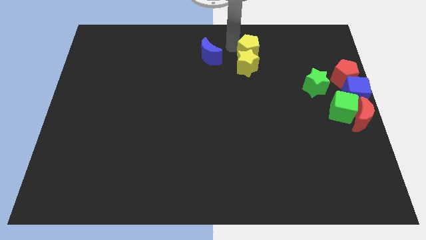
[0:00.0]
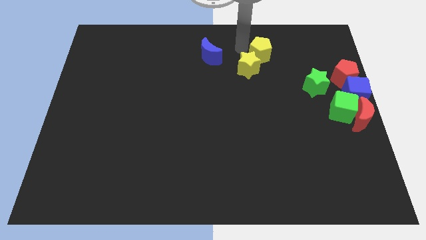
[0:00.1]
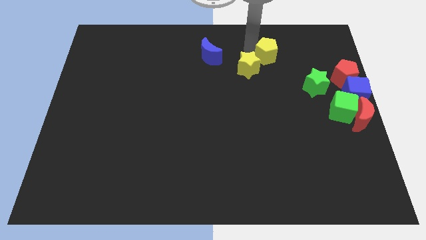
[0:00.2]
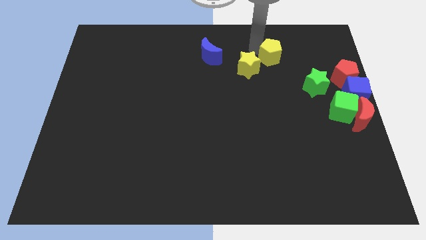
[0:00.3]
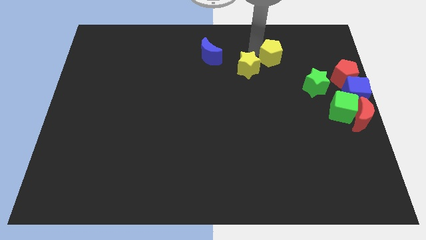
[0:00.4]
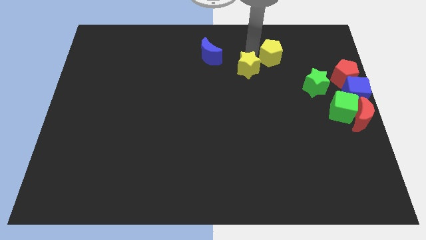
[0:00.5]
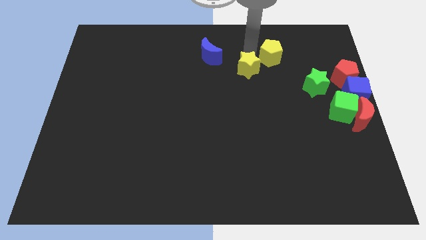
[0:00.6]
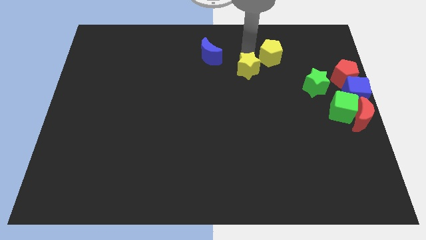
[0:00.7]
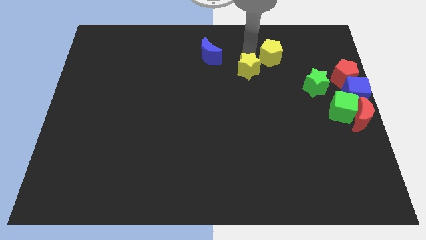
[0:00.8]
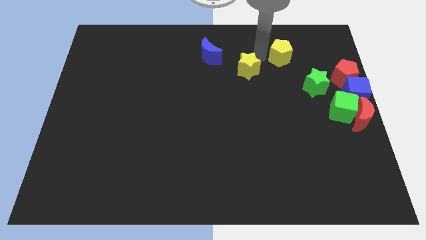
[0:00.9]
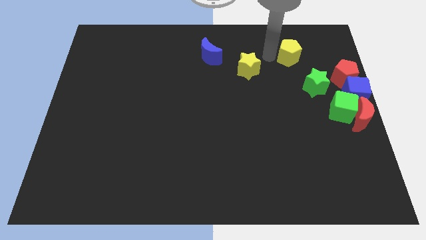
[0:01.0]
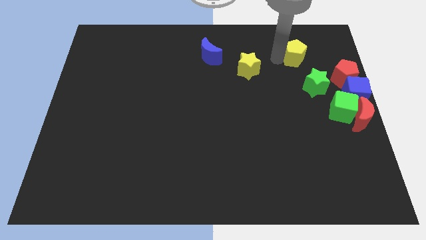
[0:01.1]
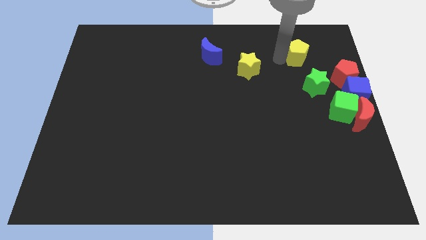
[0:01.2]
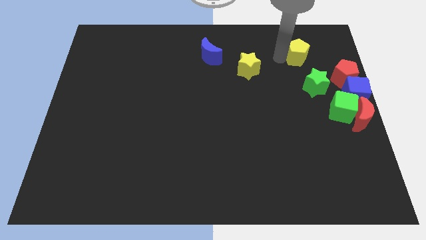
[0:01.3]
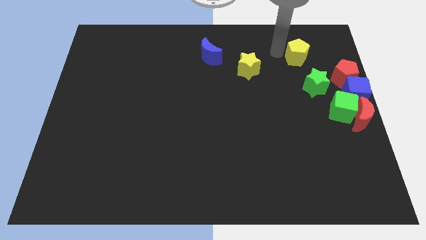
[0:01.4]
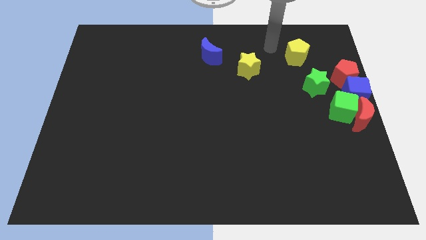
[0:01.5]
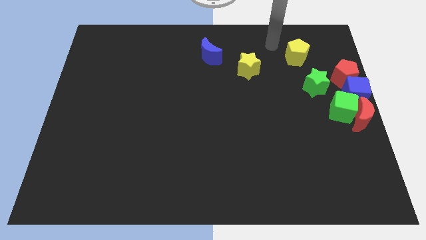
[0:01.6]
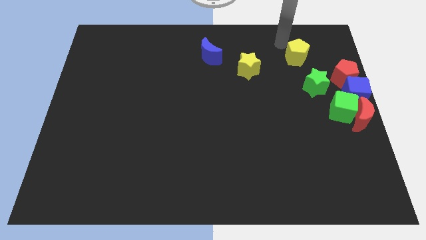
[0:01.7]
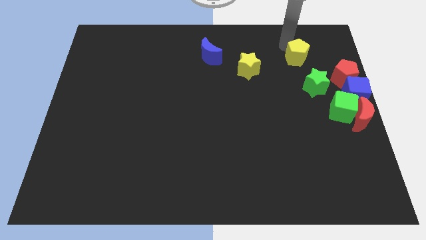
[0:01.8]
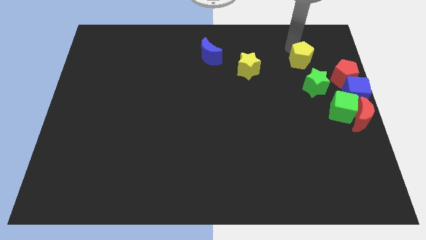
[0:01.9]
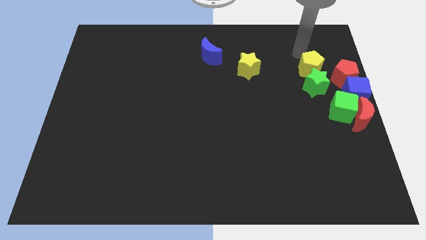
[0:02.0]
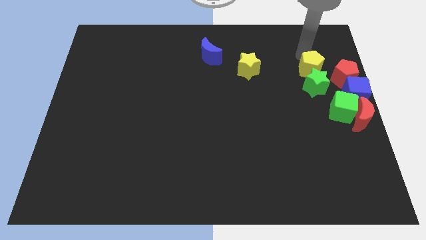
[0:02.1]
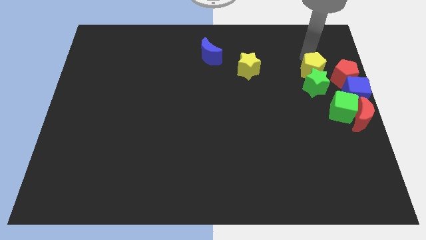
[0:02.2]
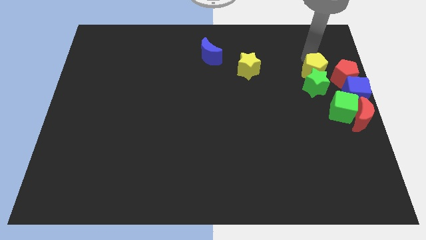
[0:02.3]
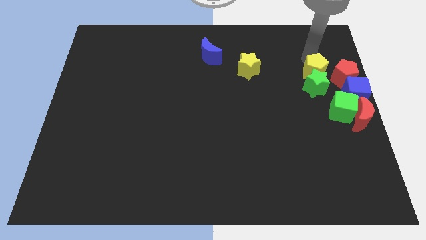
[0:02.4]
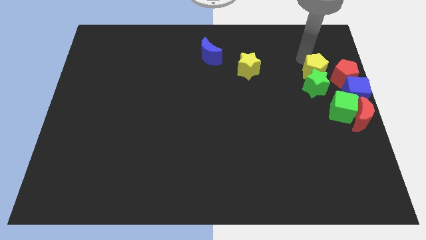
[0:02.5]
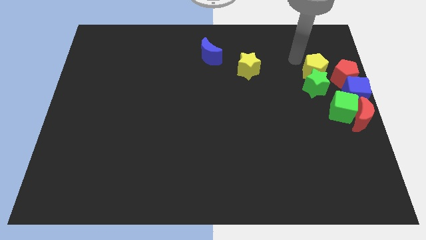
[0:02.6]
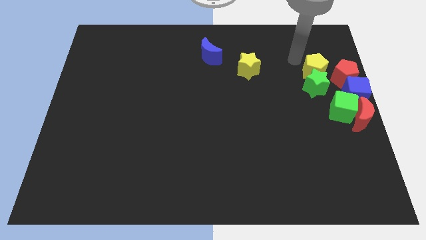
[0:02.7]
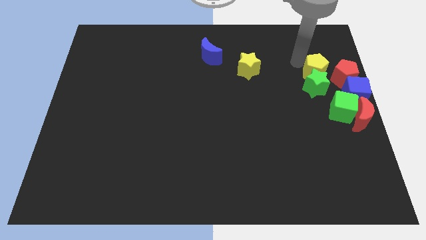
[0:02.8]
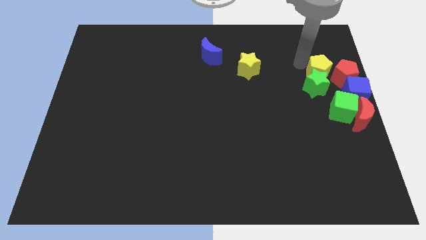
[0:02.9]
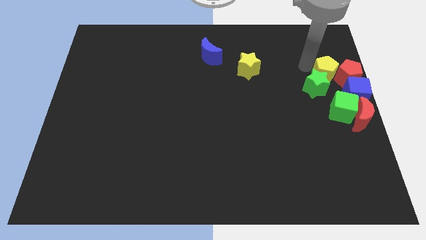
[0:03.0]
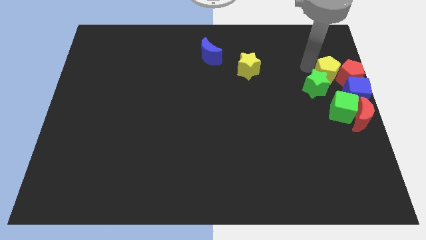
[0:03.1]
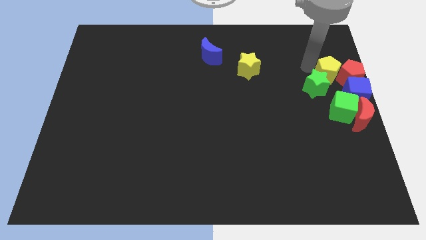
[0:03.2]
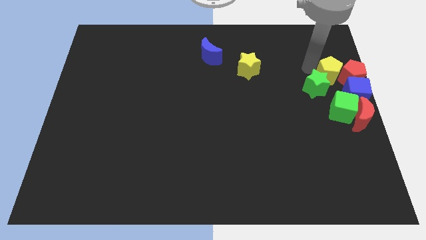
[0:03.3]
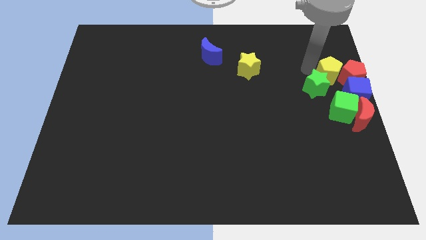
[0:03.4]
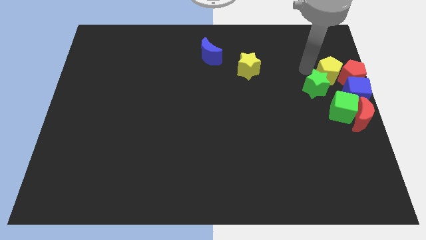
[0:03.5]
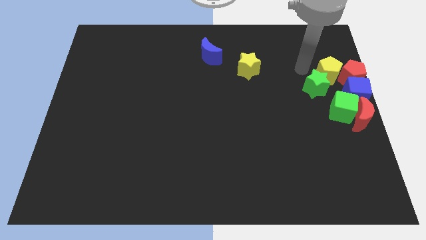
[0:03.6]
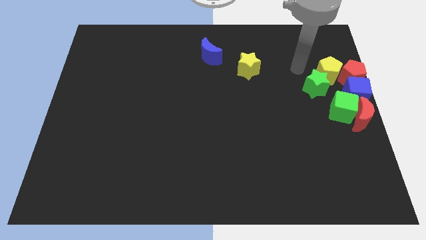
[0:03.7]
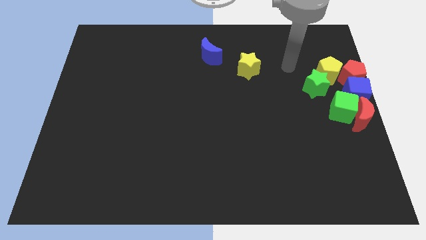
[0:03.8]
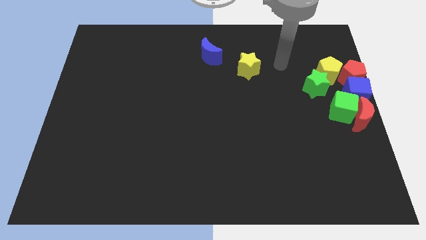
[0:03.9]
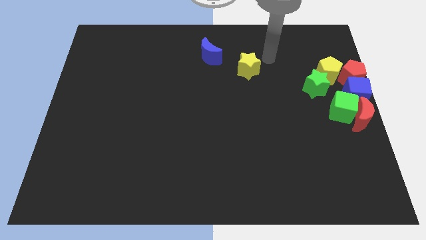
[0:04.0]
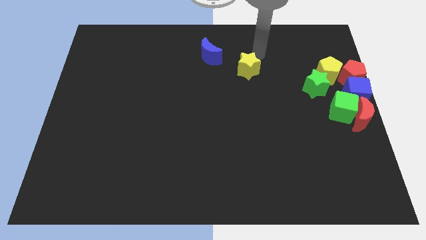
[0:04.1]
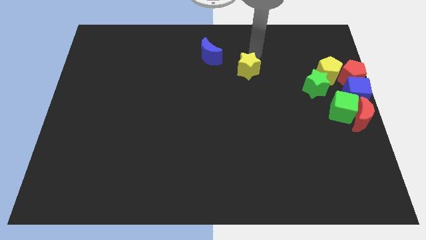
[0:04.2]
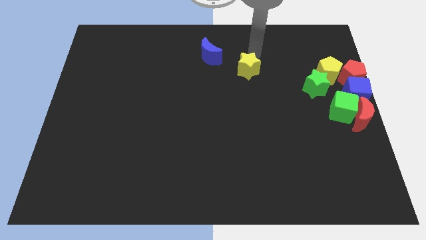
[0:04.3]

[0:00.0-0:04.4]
move the yellow pentagon to the left of red pentagon

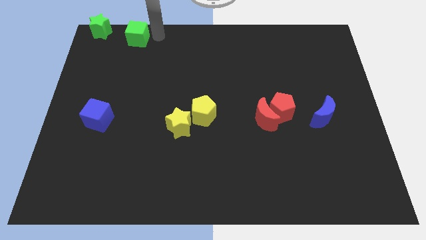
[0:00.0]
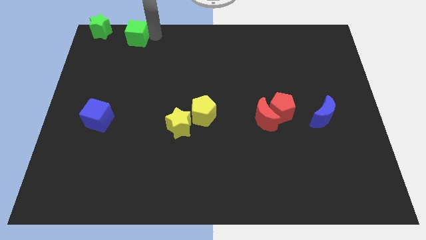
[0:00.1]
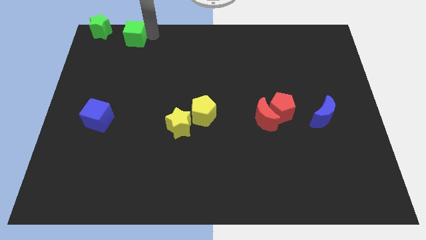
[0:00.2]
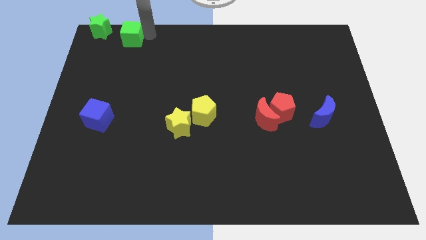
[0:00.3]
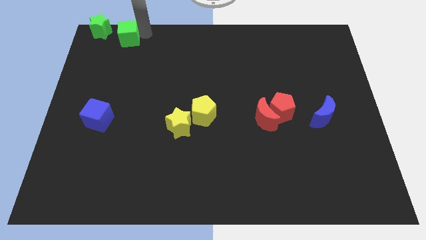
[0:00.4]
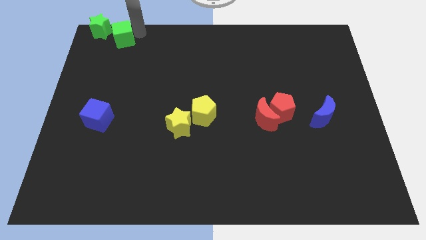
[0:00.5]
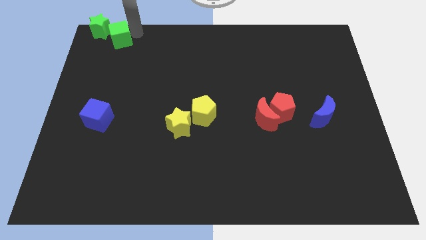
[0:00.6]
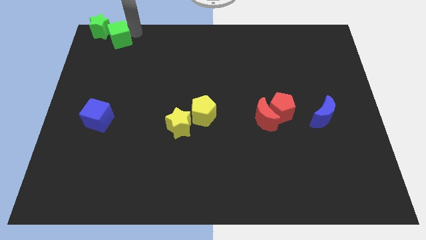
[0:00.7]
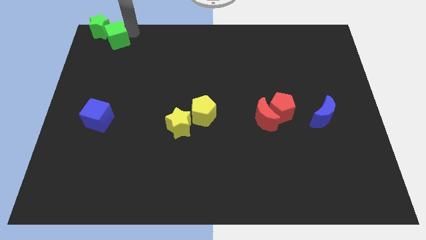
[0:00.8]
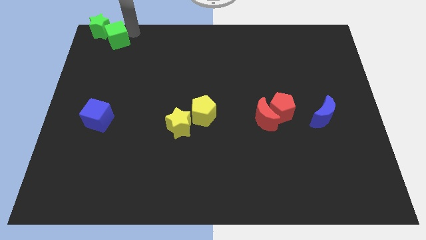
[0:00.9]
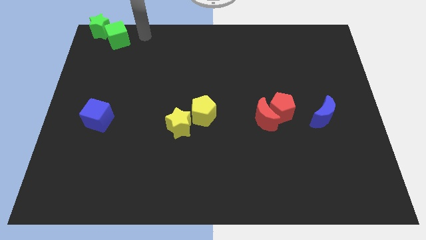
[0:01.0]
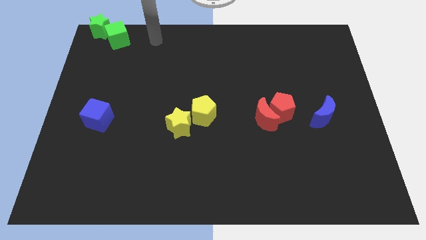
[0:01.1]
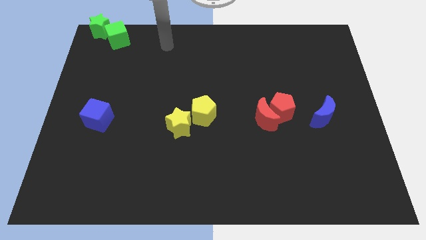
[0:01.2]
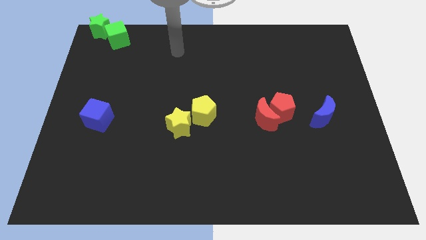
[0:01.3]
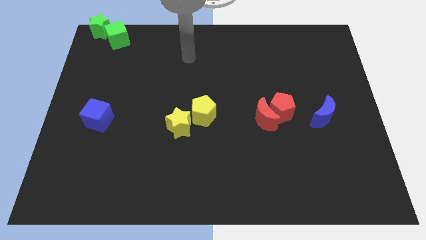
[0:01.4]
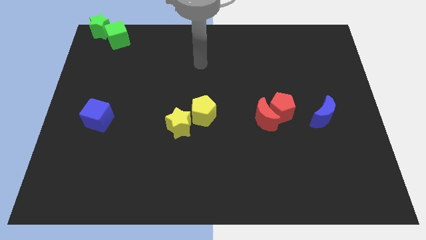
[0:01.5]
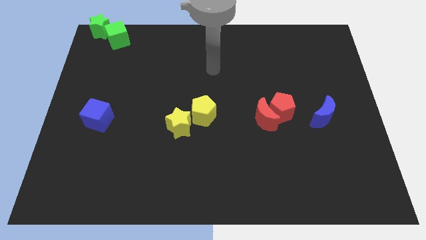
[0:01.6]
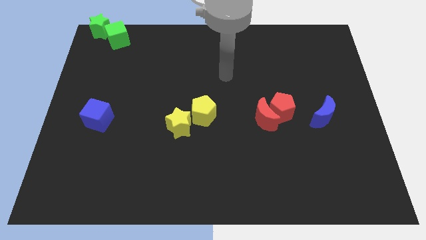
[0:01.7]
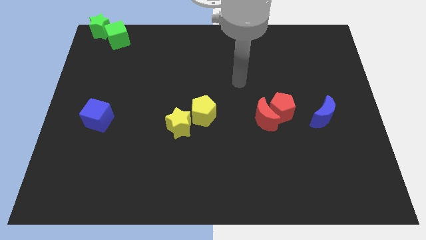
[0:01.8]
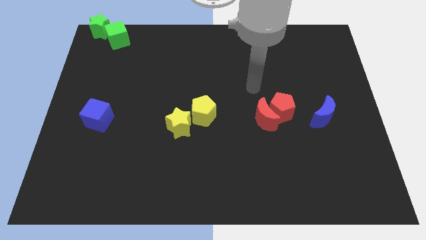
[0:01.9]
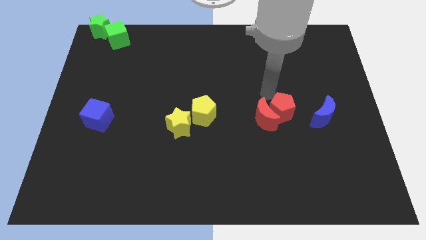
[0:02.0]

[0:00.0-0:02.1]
place the green cube diagonally to the green star

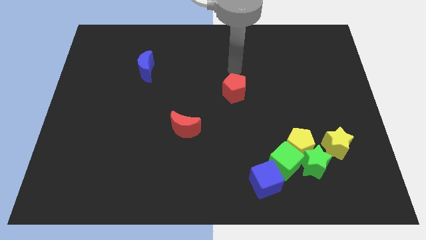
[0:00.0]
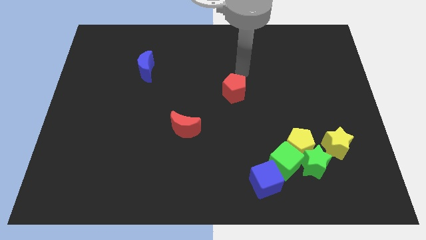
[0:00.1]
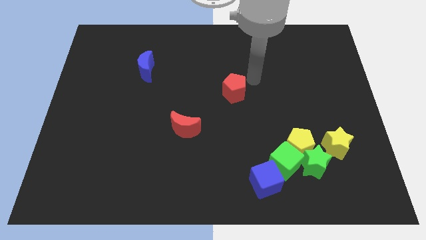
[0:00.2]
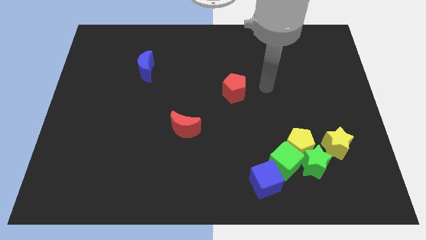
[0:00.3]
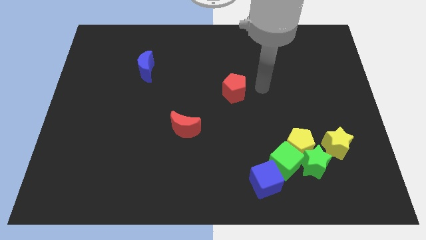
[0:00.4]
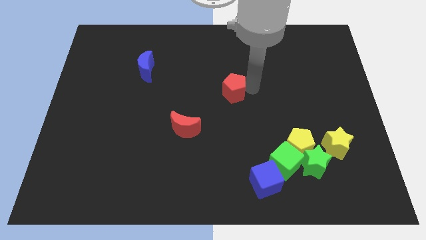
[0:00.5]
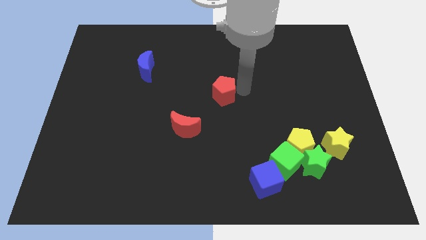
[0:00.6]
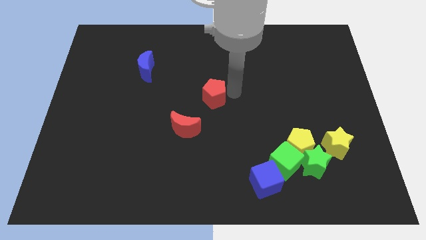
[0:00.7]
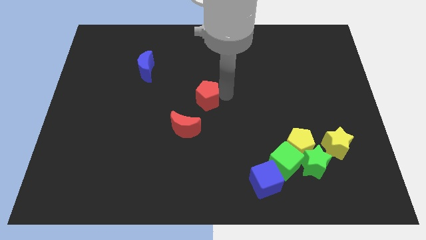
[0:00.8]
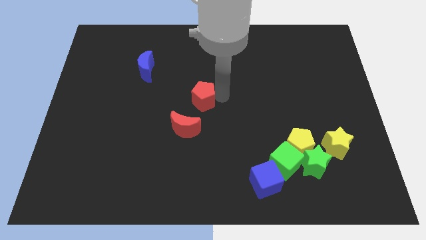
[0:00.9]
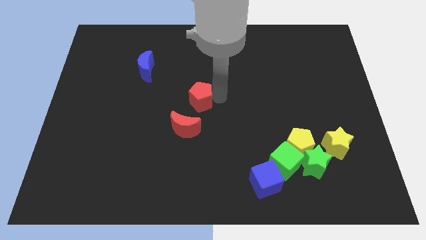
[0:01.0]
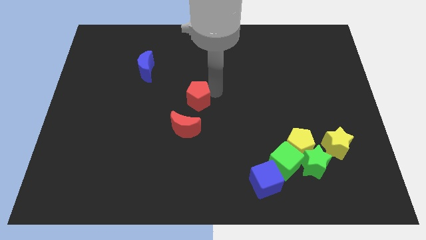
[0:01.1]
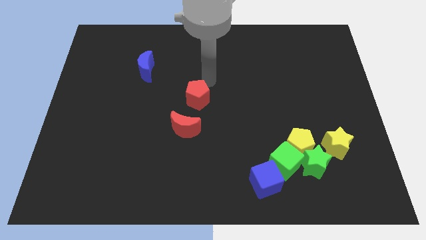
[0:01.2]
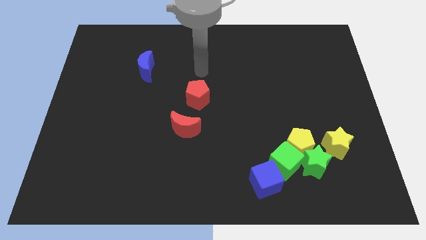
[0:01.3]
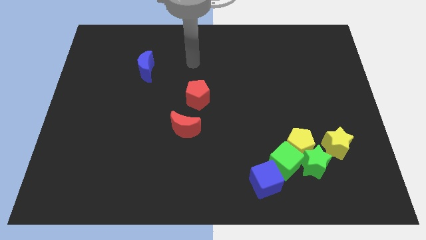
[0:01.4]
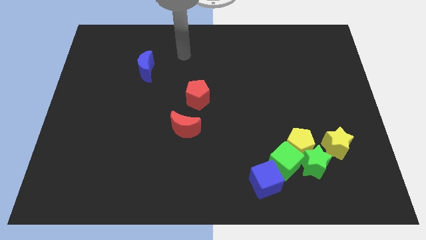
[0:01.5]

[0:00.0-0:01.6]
push the red pentagon at the top side of the red moon

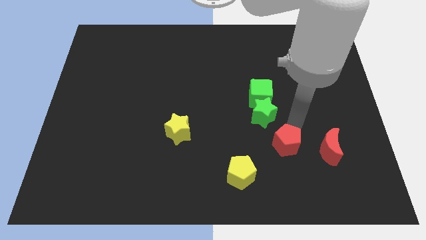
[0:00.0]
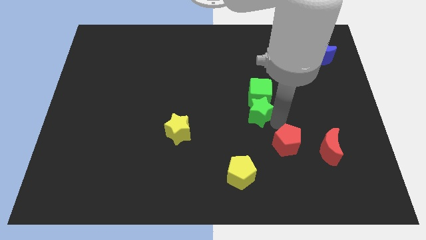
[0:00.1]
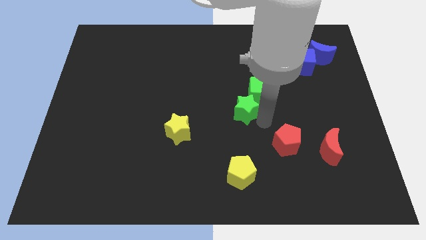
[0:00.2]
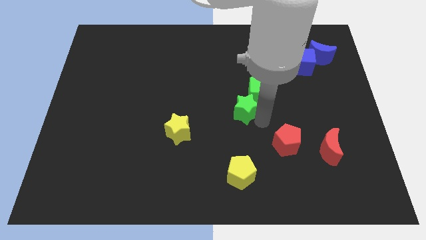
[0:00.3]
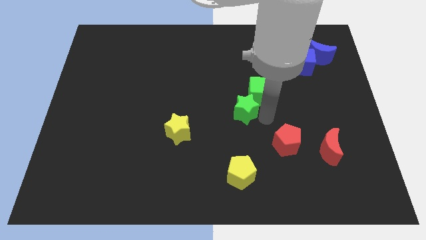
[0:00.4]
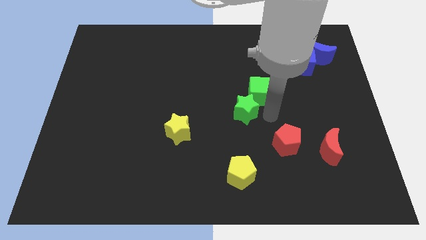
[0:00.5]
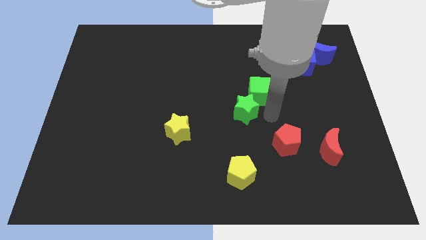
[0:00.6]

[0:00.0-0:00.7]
place green star above yellow pentagon

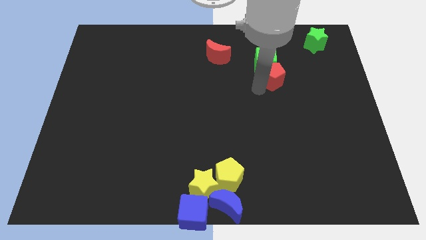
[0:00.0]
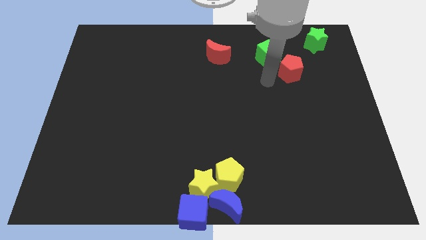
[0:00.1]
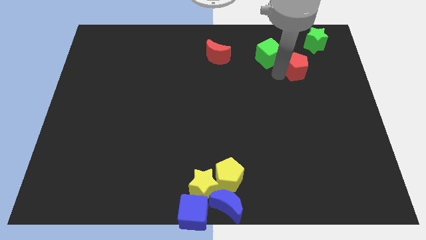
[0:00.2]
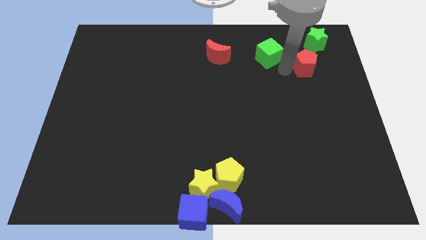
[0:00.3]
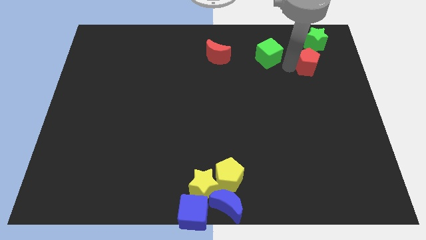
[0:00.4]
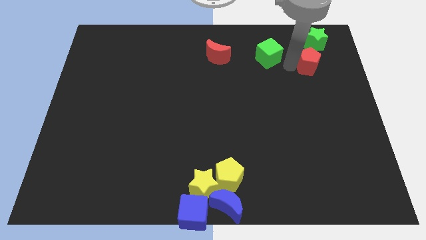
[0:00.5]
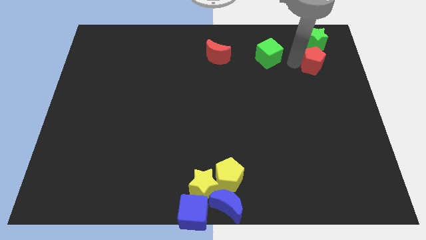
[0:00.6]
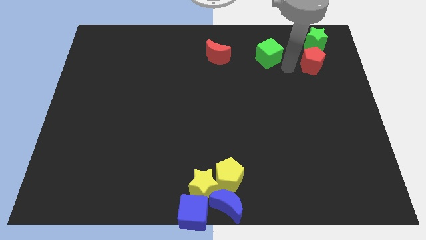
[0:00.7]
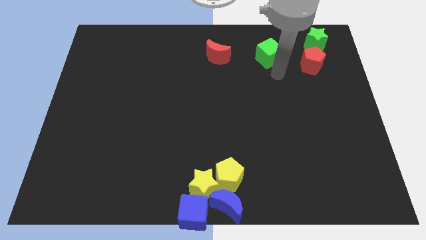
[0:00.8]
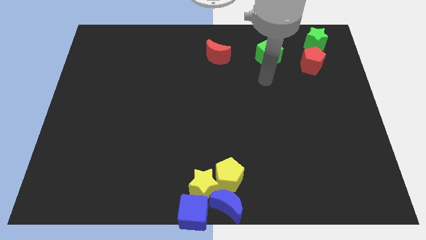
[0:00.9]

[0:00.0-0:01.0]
place the red pentagon below the green star
